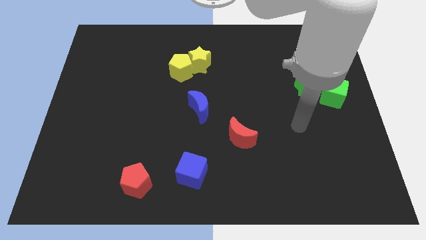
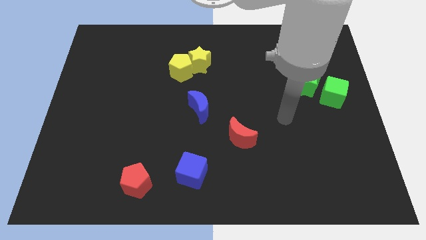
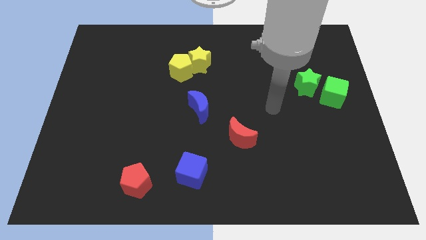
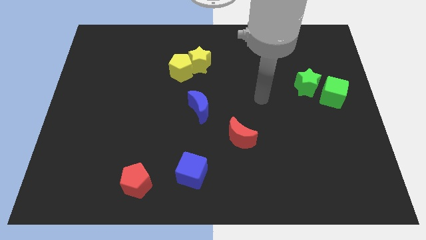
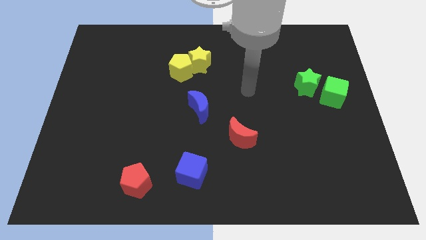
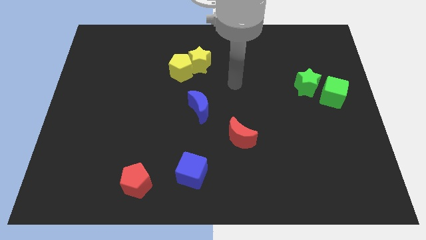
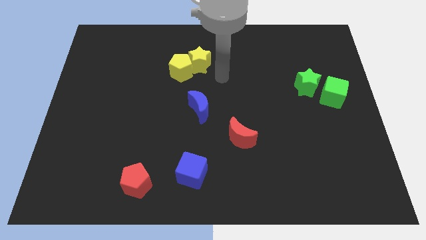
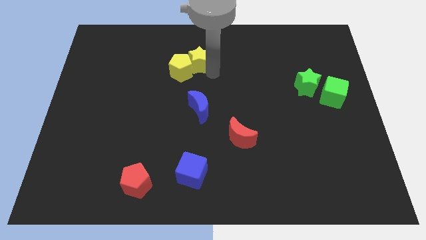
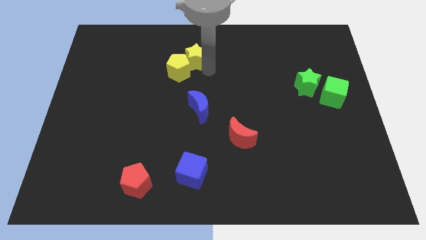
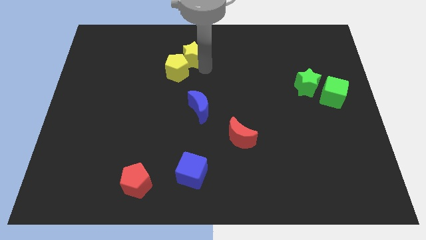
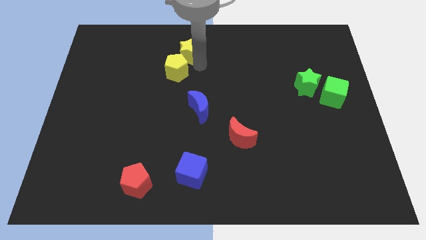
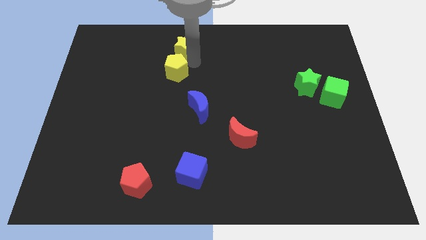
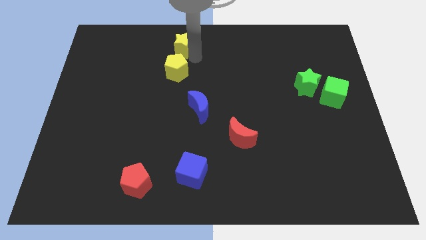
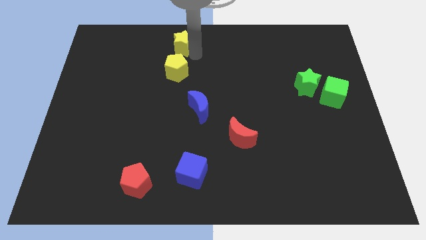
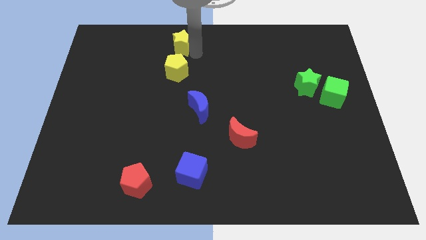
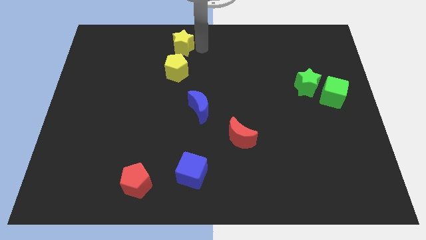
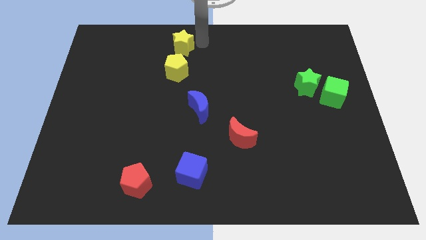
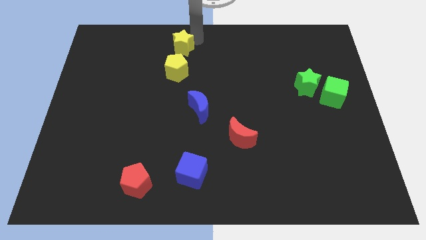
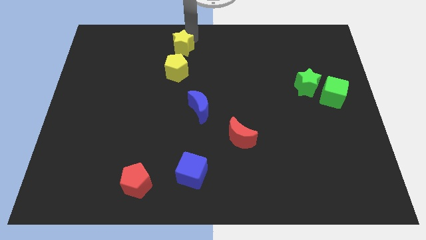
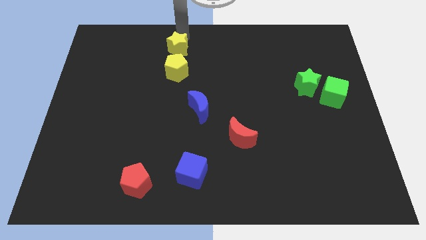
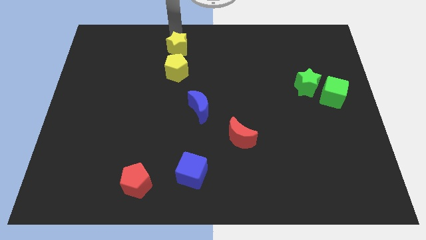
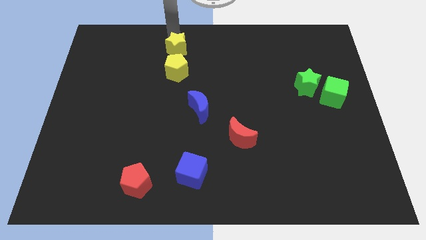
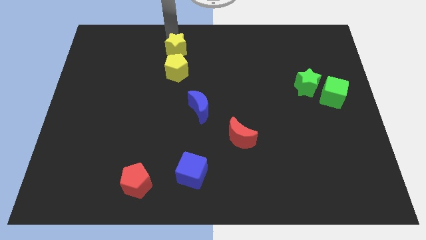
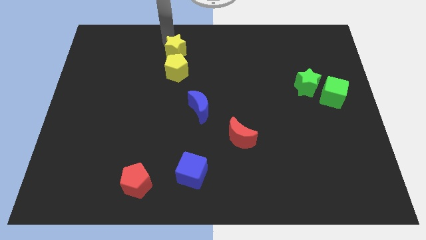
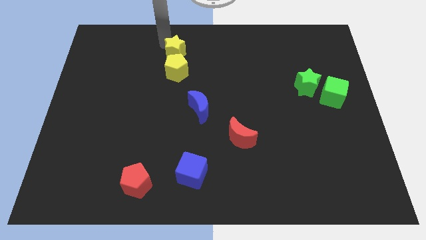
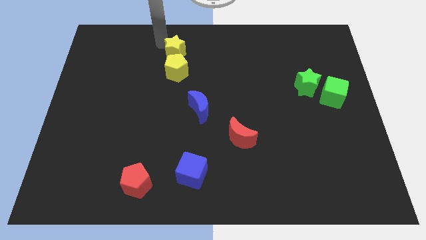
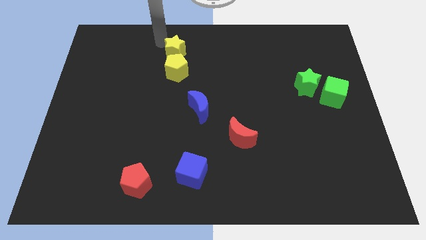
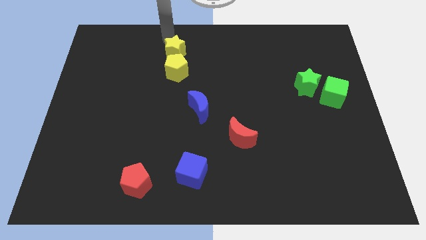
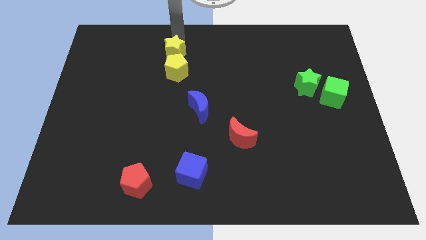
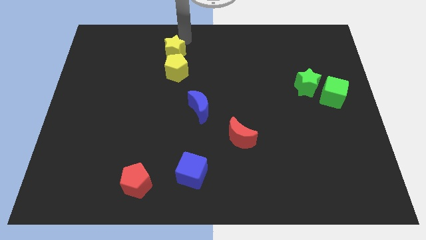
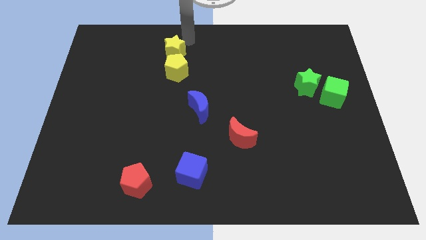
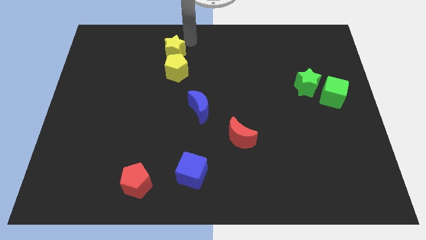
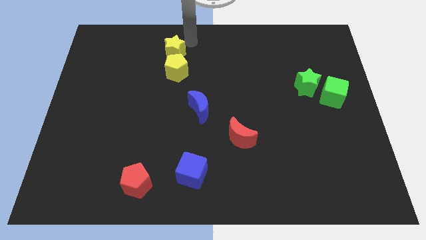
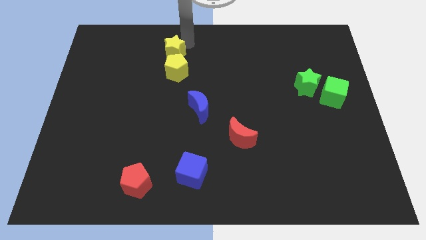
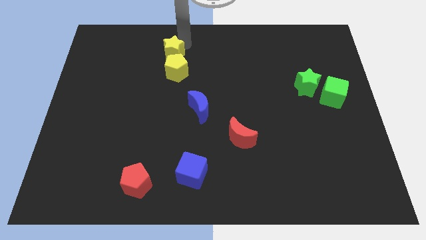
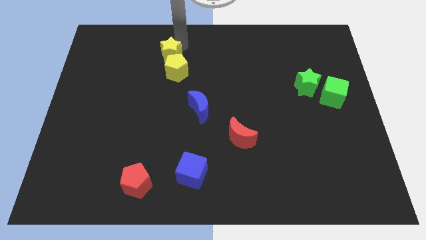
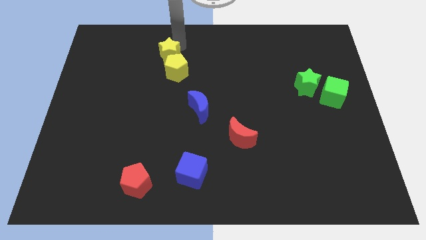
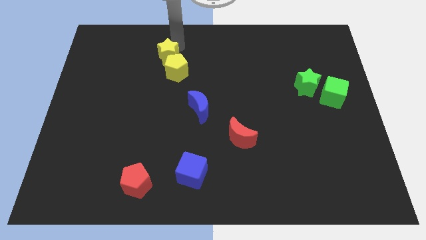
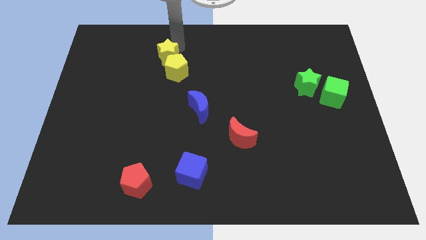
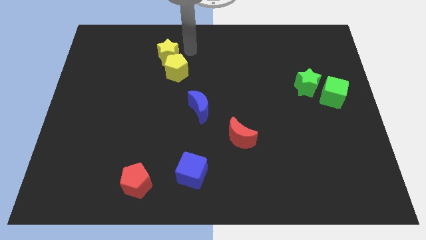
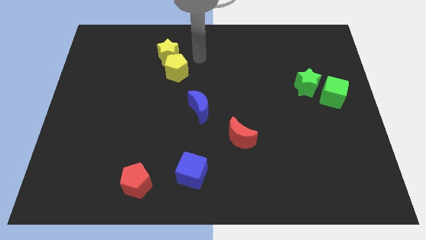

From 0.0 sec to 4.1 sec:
move the yellow star to the top left of the yellow pentagon

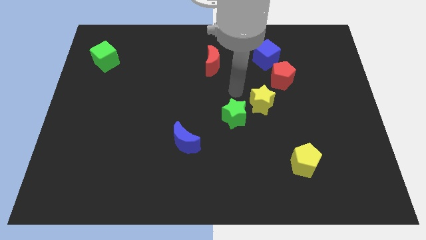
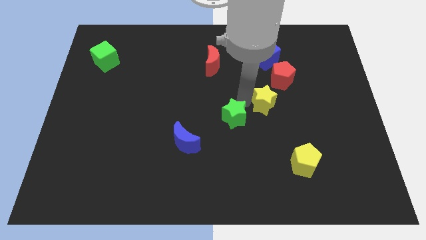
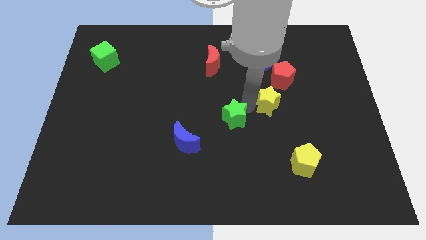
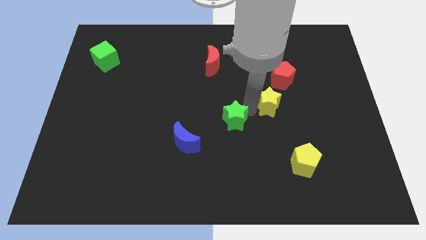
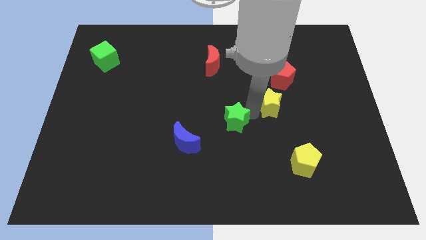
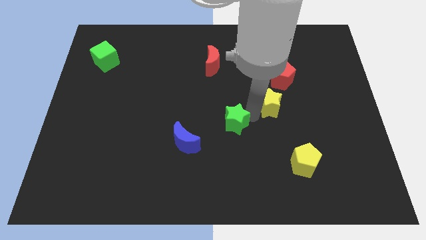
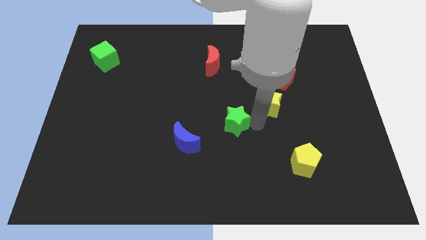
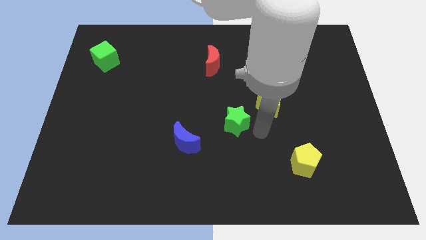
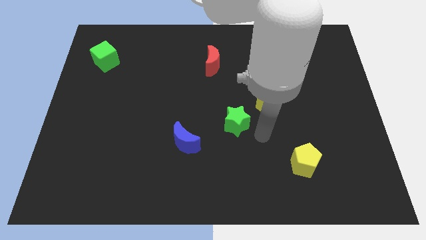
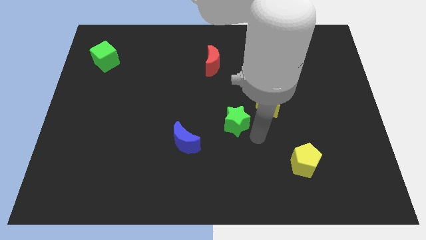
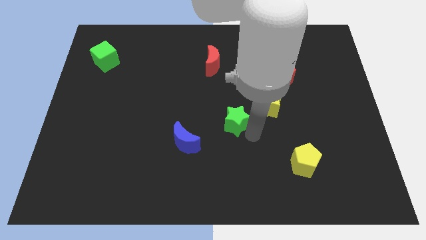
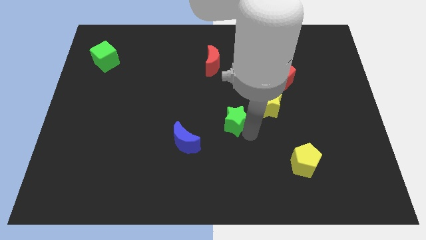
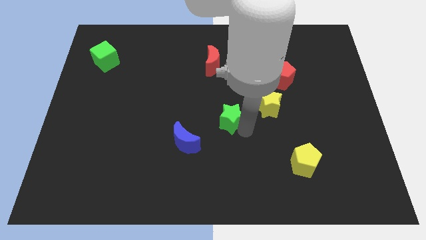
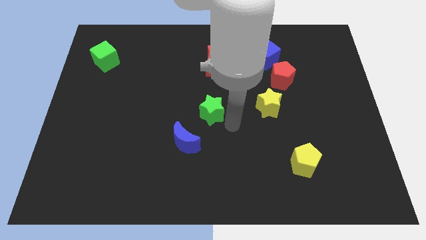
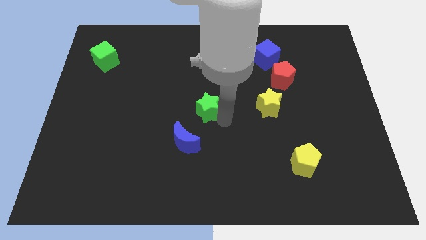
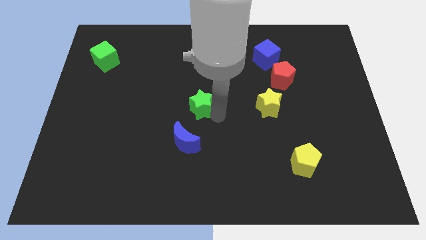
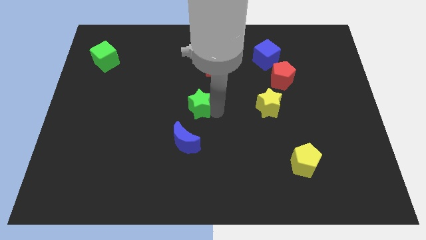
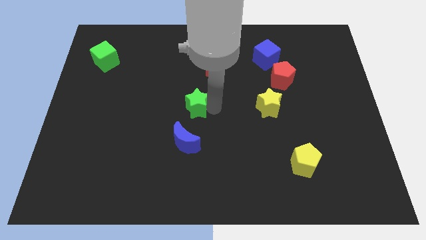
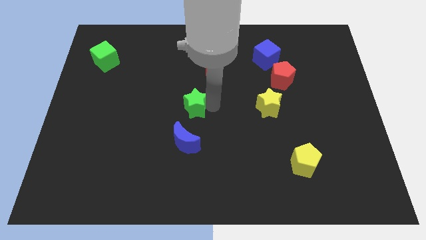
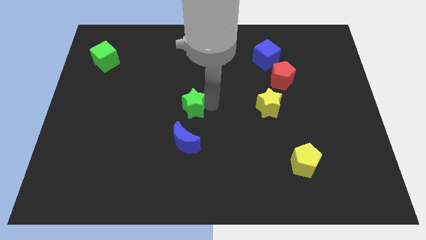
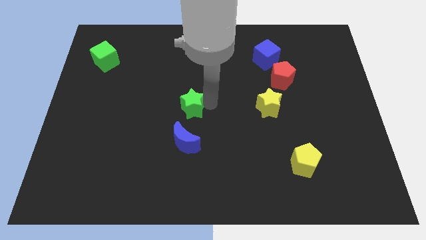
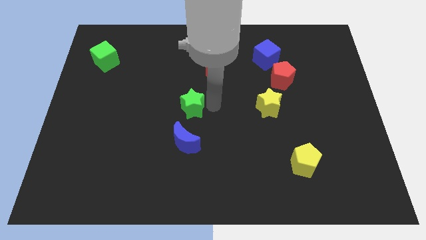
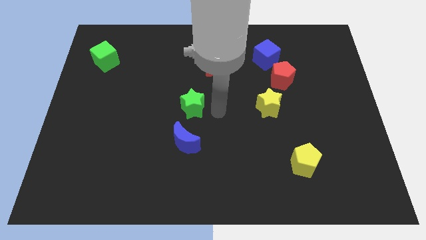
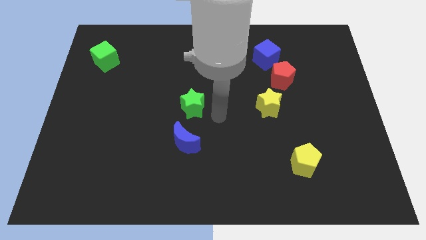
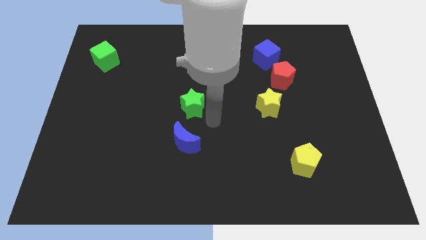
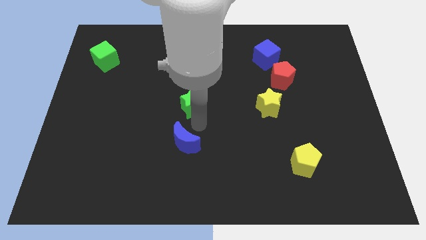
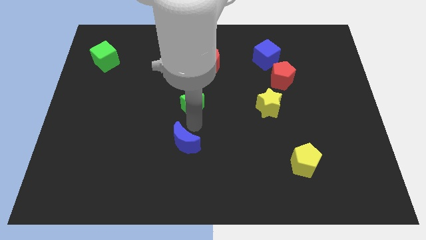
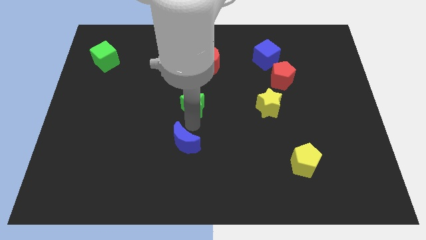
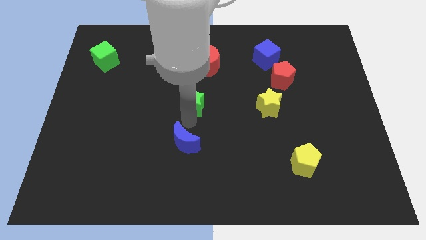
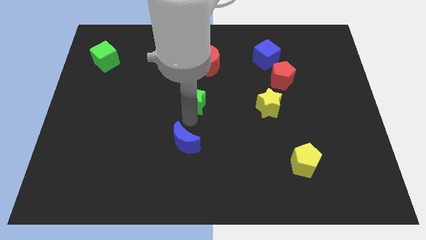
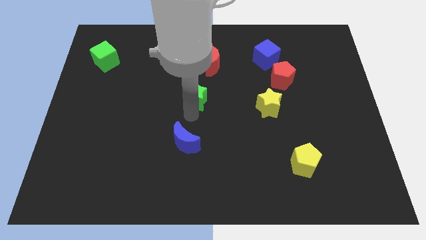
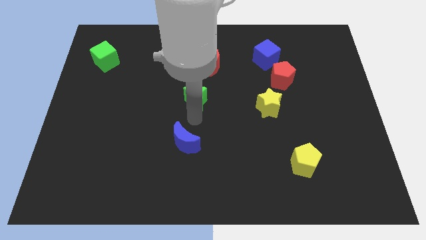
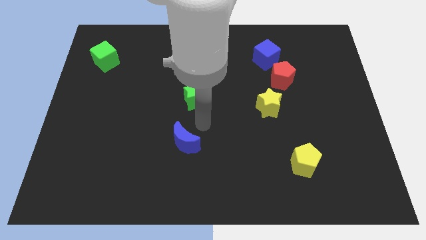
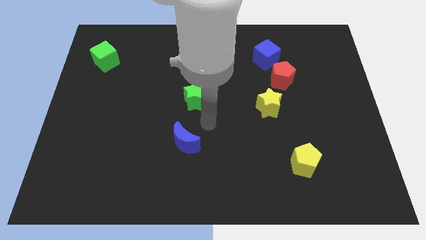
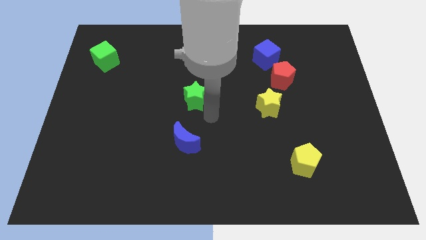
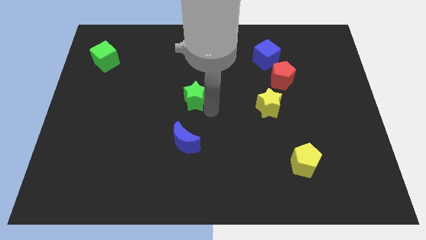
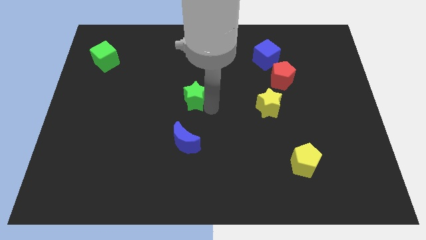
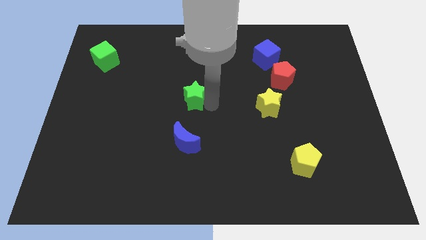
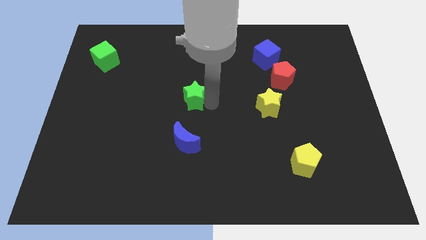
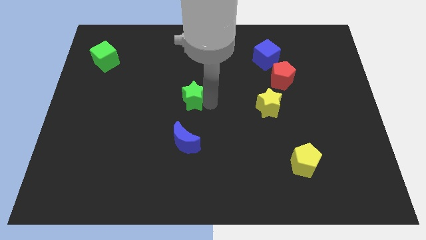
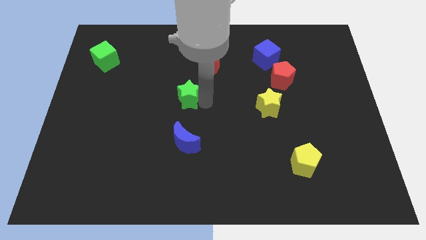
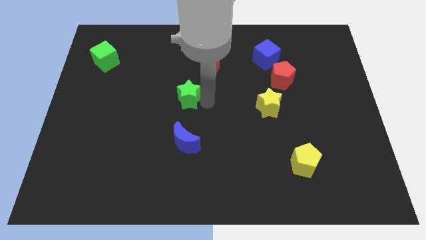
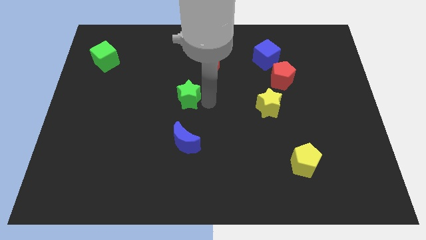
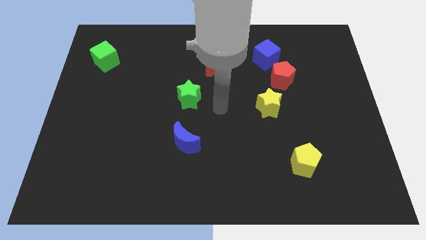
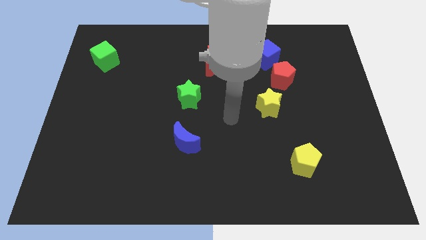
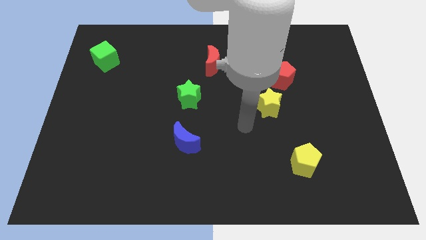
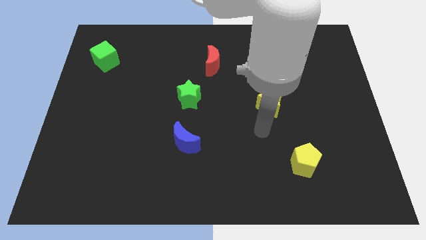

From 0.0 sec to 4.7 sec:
place the green star in between the red moon and blue moon

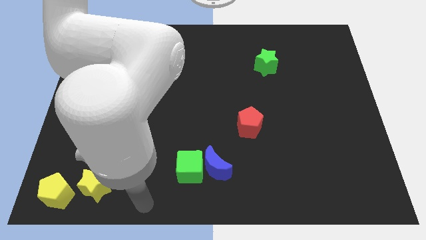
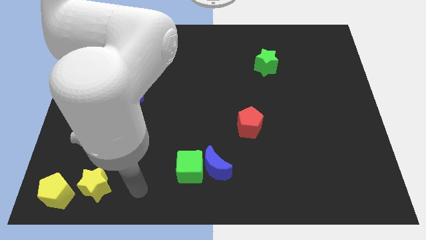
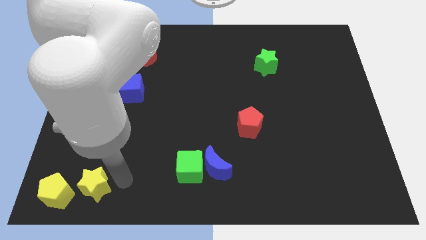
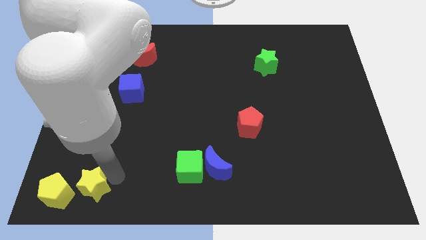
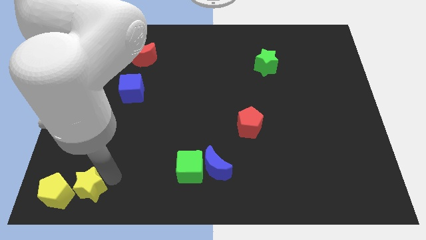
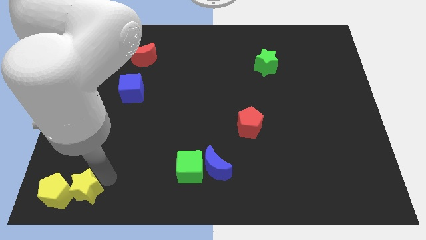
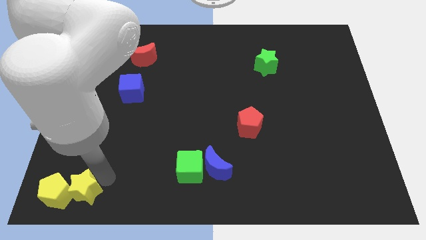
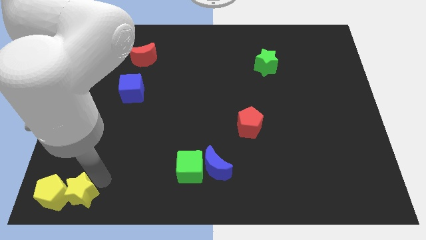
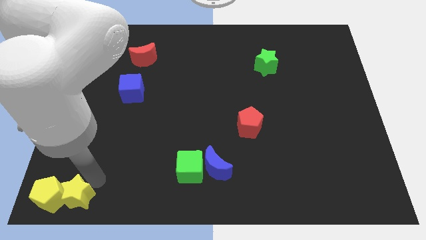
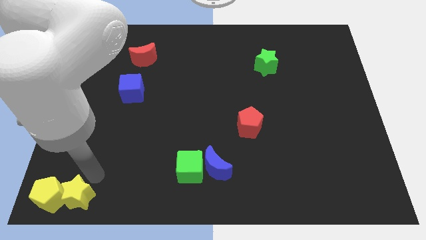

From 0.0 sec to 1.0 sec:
move yellow blocks to the bottom left
